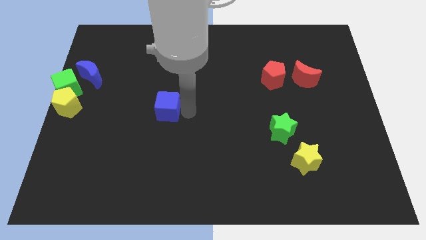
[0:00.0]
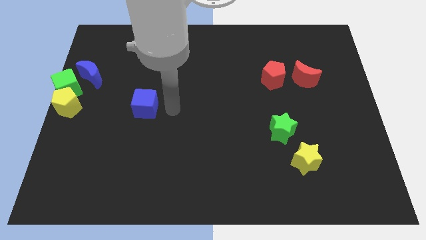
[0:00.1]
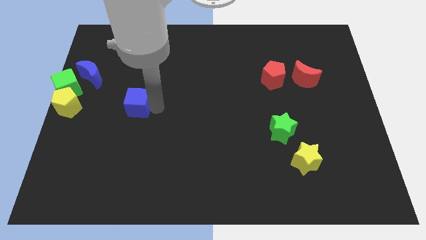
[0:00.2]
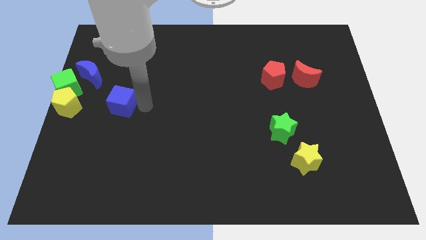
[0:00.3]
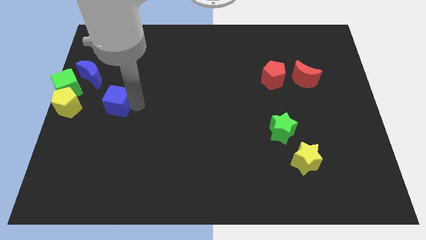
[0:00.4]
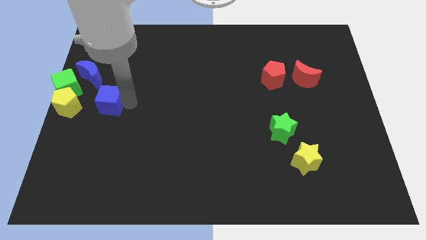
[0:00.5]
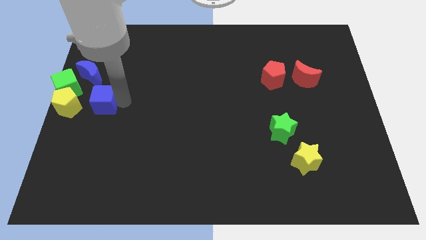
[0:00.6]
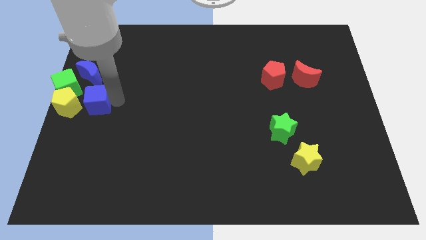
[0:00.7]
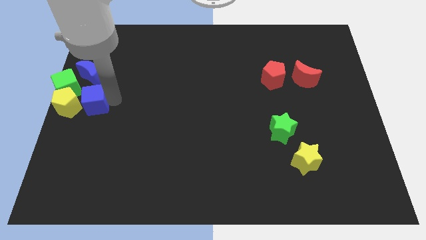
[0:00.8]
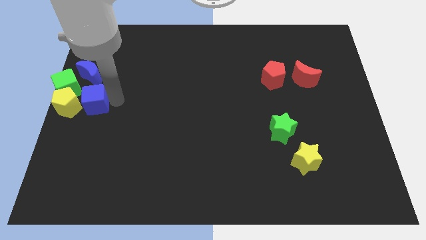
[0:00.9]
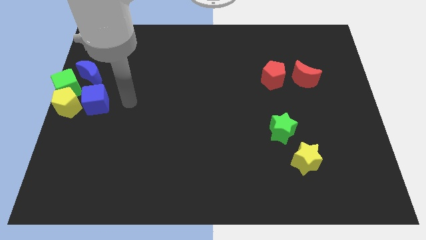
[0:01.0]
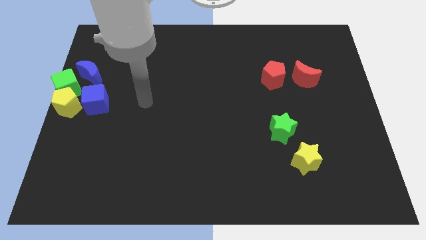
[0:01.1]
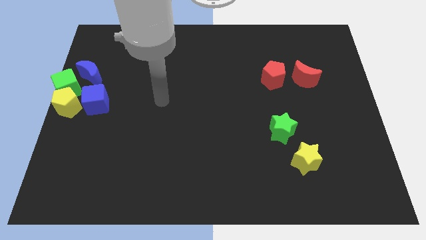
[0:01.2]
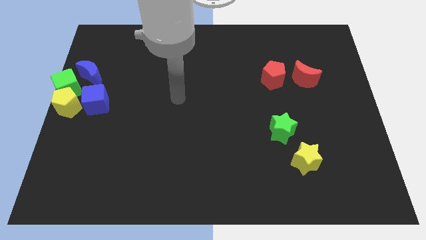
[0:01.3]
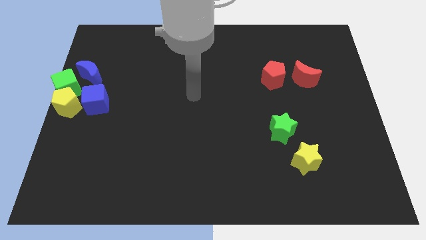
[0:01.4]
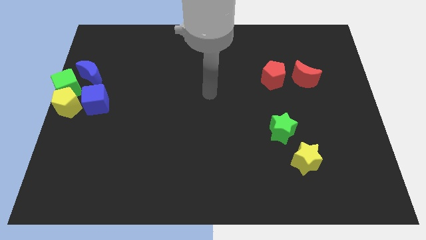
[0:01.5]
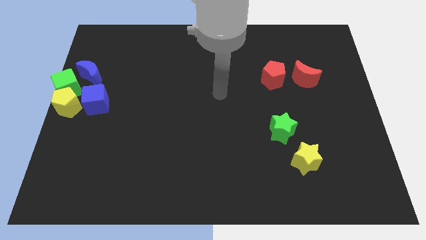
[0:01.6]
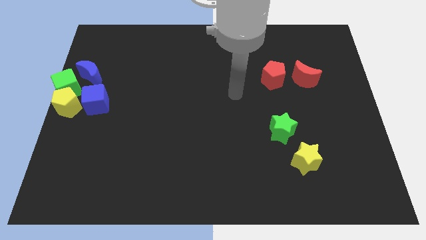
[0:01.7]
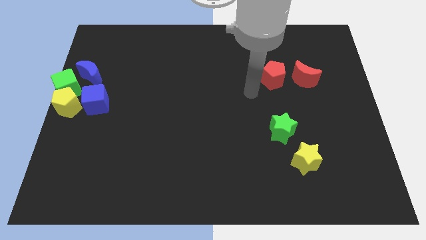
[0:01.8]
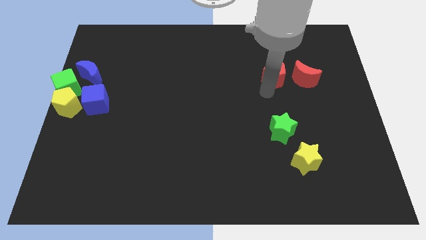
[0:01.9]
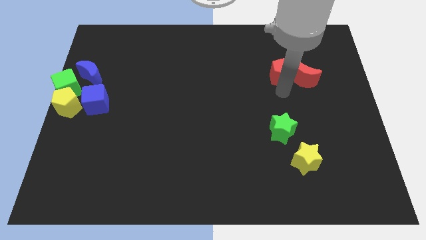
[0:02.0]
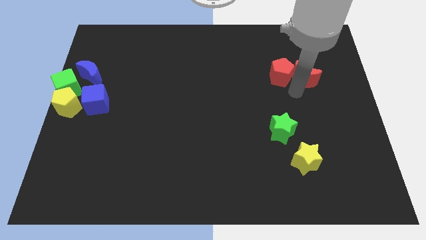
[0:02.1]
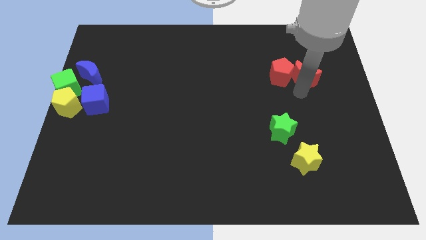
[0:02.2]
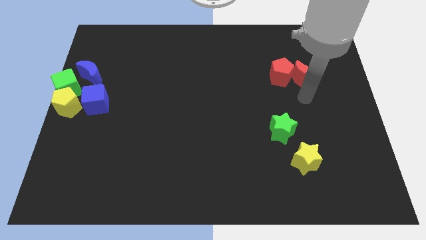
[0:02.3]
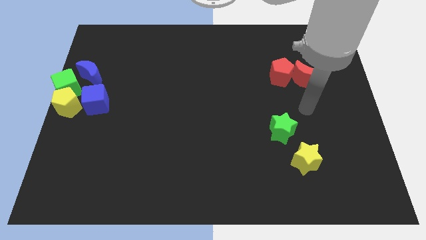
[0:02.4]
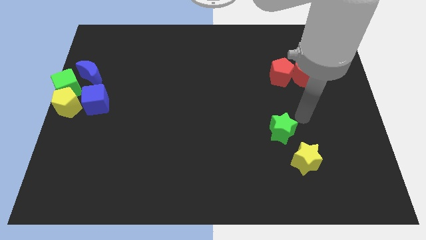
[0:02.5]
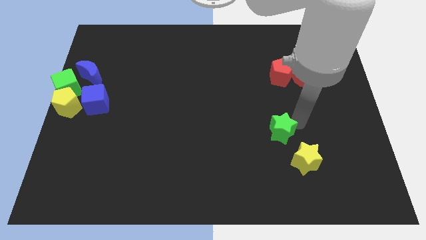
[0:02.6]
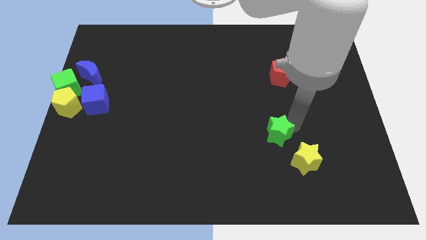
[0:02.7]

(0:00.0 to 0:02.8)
place the blue cube to the right side of the yellow pentagon

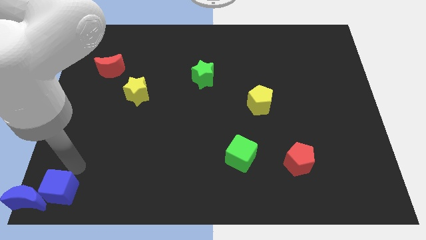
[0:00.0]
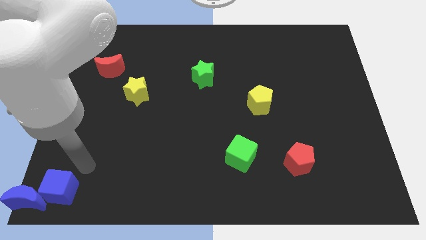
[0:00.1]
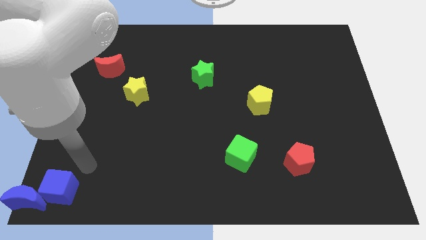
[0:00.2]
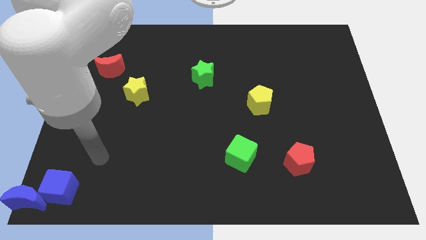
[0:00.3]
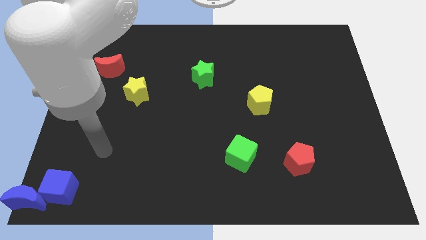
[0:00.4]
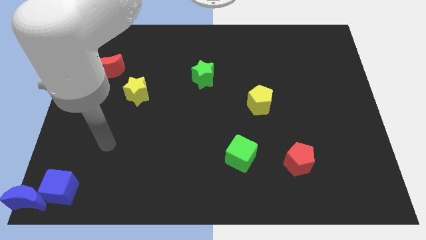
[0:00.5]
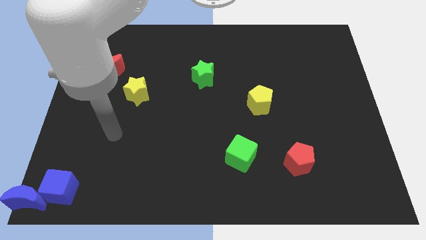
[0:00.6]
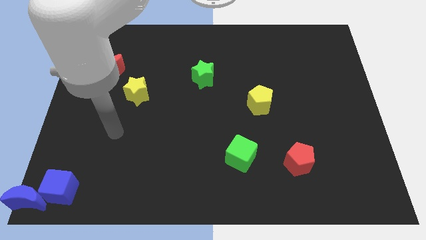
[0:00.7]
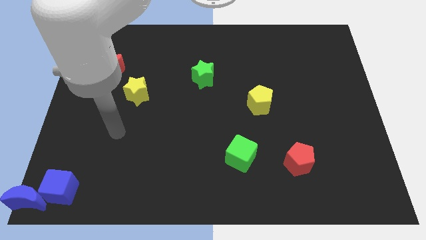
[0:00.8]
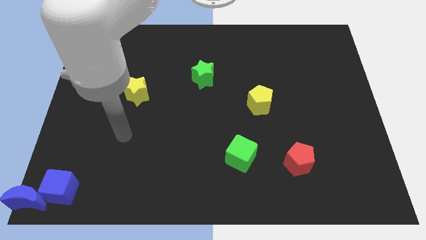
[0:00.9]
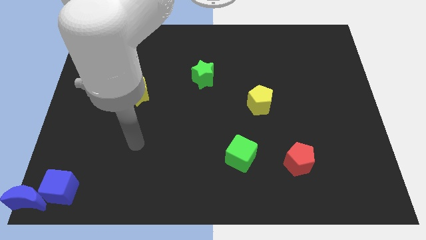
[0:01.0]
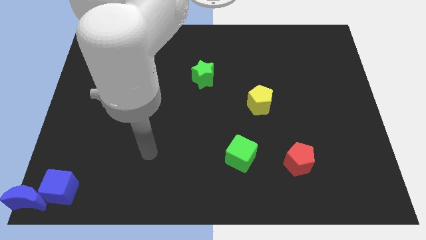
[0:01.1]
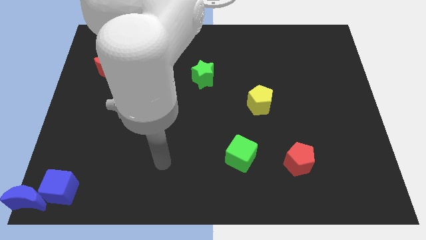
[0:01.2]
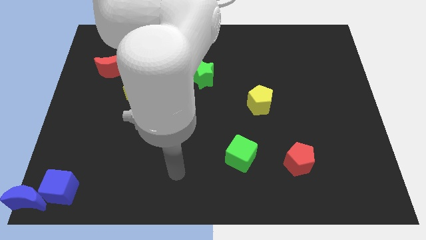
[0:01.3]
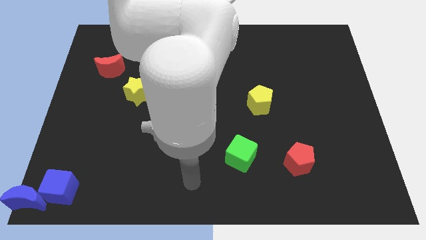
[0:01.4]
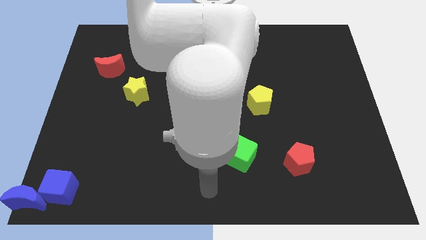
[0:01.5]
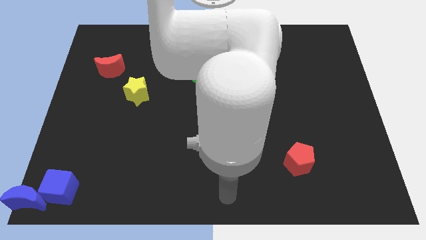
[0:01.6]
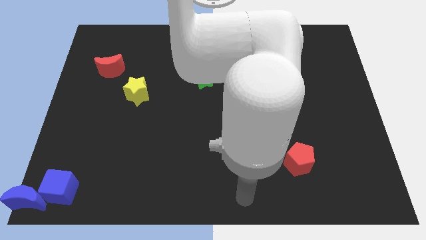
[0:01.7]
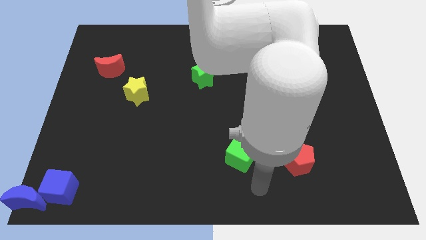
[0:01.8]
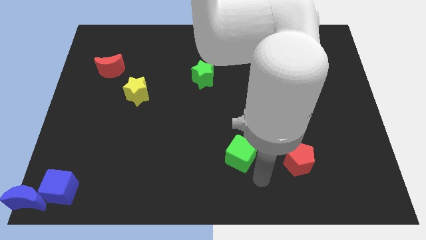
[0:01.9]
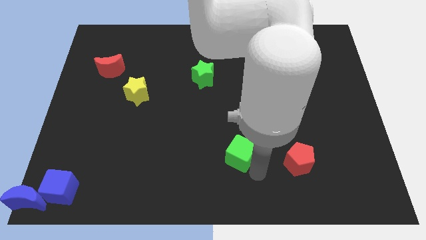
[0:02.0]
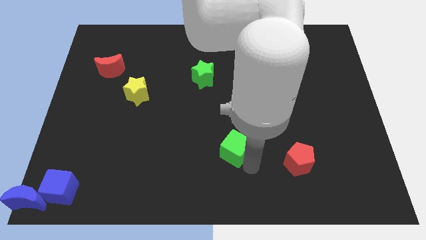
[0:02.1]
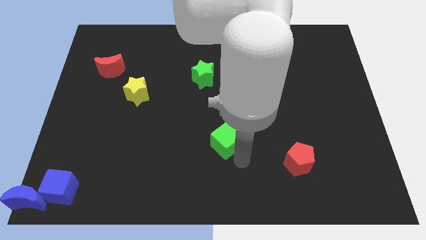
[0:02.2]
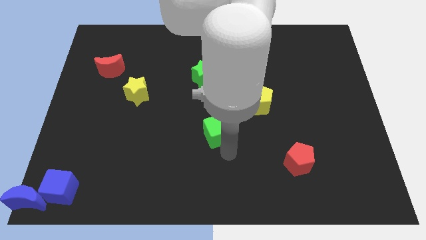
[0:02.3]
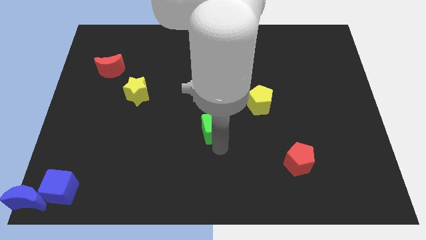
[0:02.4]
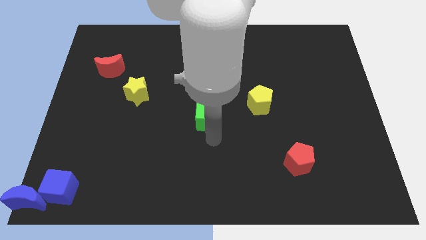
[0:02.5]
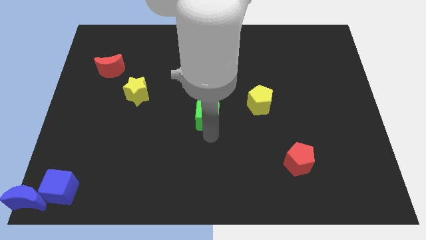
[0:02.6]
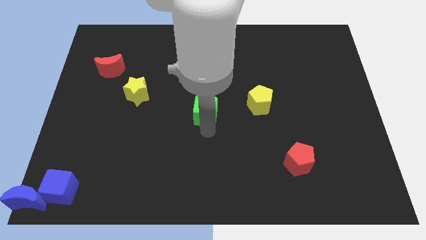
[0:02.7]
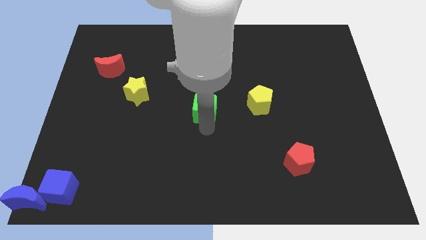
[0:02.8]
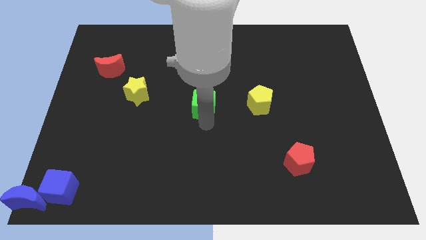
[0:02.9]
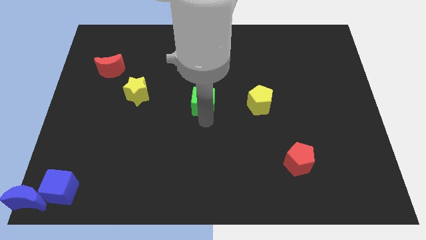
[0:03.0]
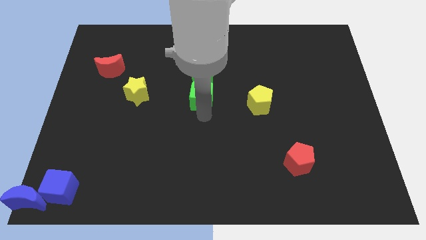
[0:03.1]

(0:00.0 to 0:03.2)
push the green cube to the left of the yellow pentagon

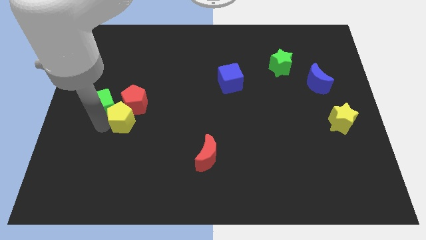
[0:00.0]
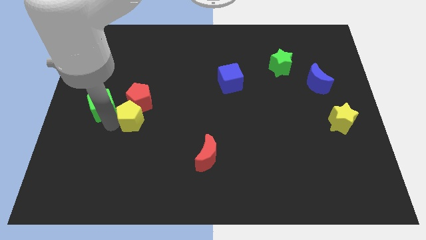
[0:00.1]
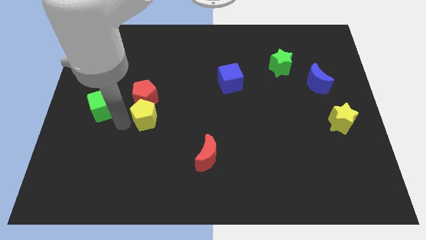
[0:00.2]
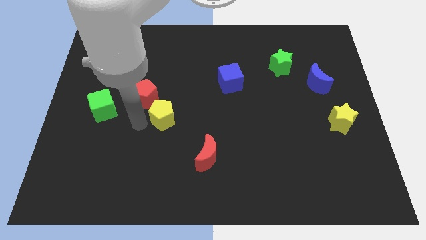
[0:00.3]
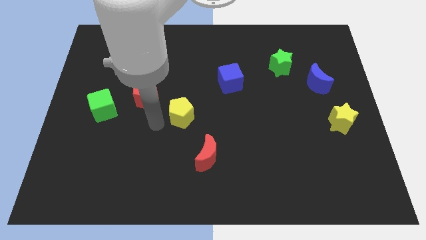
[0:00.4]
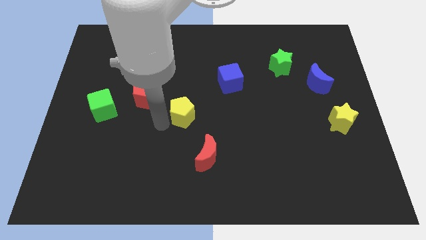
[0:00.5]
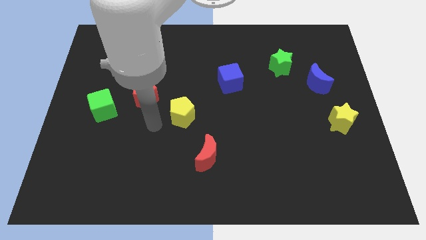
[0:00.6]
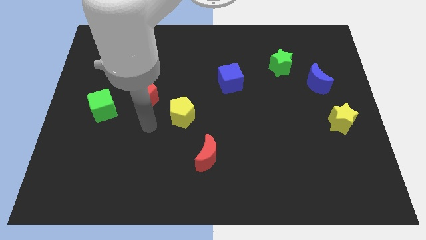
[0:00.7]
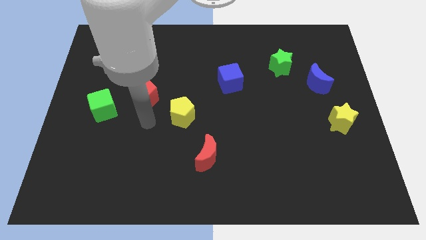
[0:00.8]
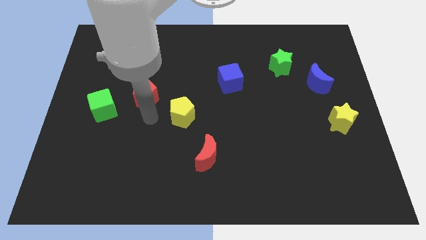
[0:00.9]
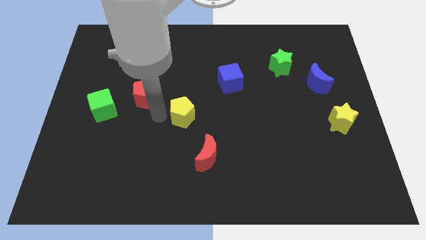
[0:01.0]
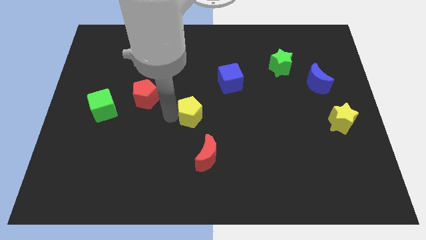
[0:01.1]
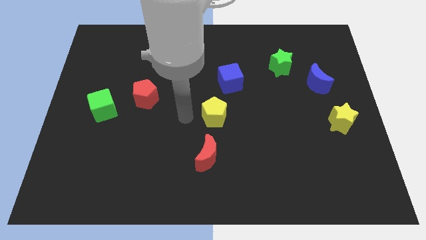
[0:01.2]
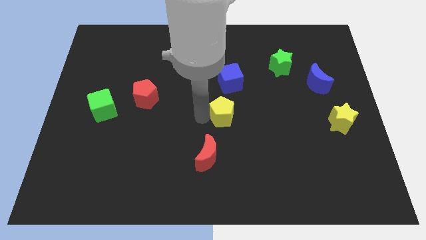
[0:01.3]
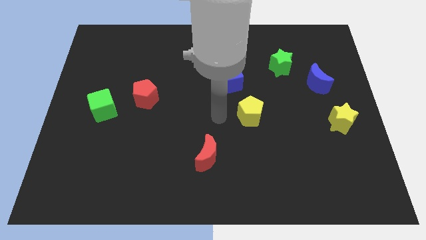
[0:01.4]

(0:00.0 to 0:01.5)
push the yellow pentagon to the center of the board

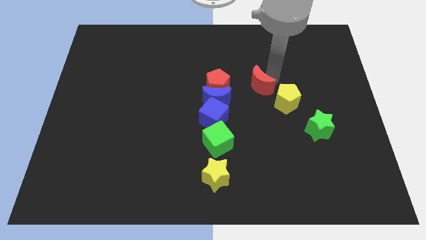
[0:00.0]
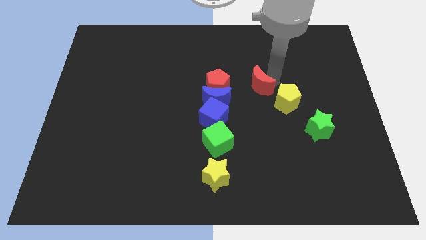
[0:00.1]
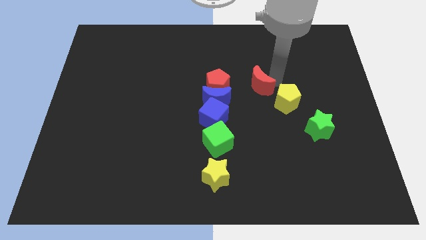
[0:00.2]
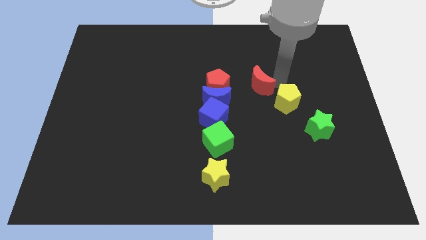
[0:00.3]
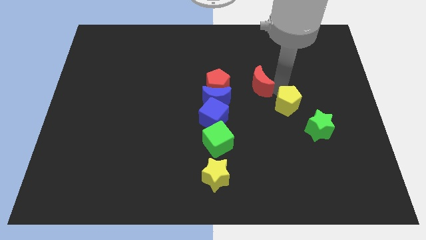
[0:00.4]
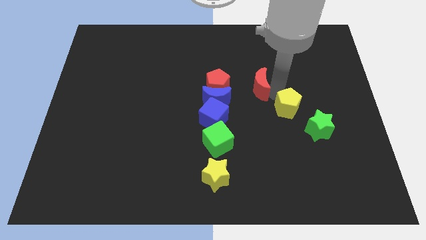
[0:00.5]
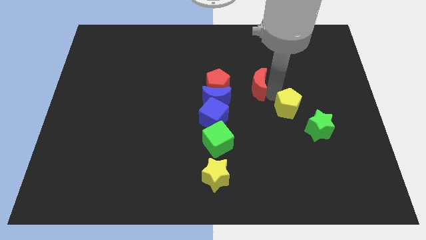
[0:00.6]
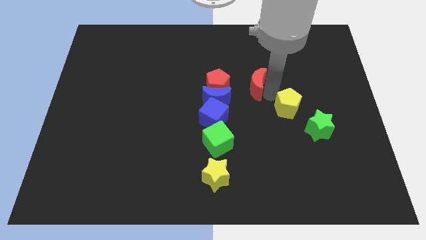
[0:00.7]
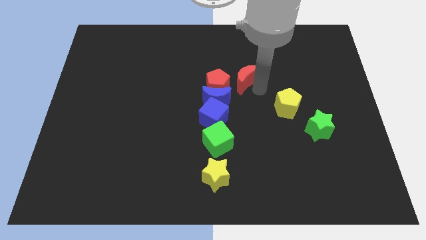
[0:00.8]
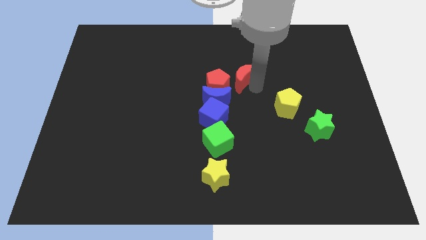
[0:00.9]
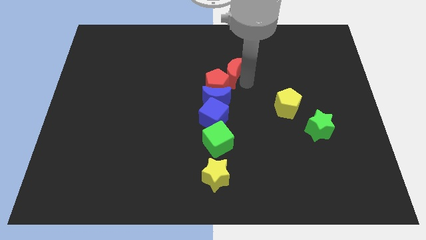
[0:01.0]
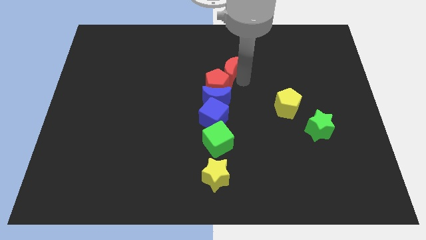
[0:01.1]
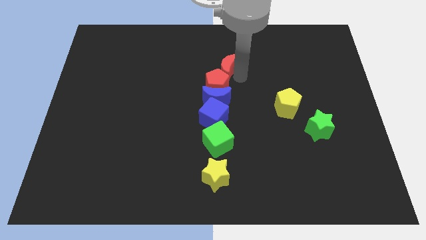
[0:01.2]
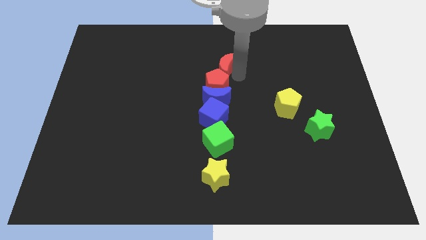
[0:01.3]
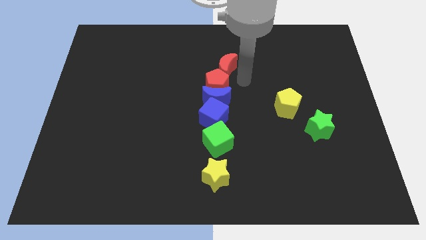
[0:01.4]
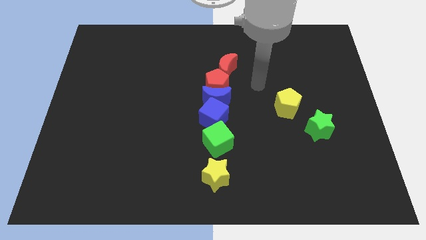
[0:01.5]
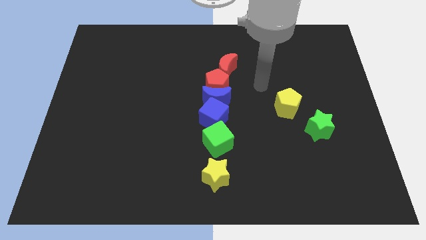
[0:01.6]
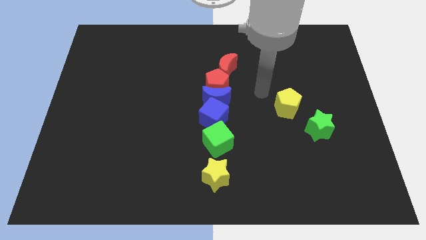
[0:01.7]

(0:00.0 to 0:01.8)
place the red crescent on top of the red pentagan in top center of the board
